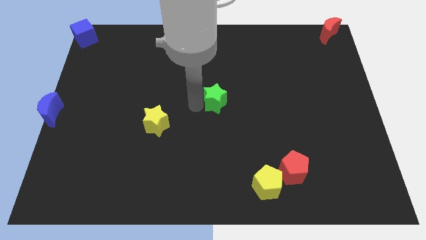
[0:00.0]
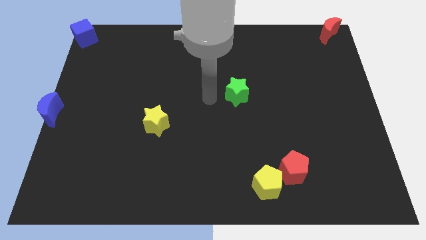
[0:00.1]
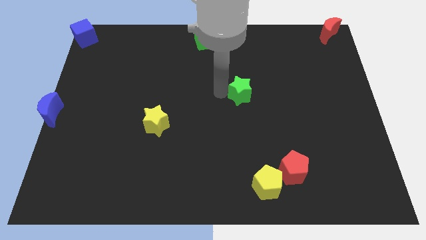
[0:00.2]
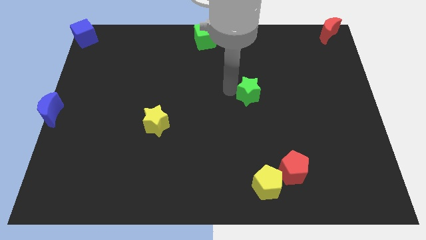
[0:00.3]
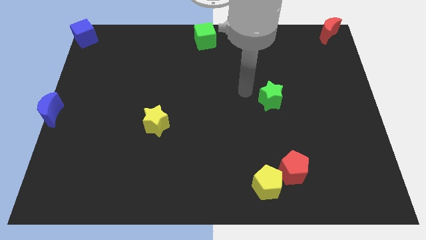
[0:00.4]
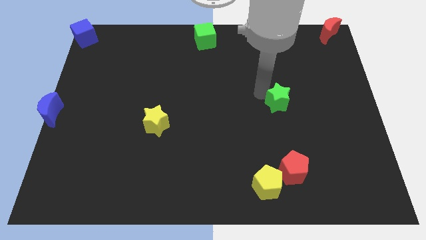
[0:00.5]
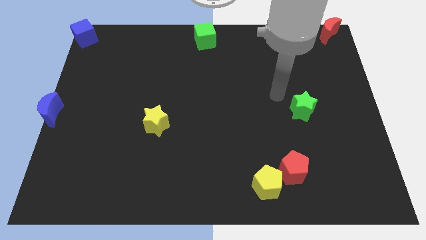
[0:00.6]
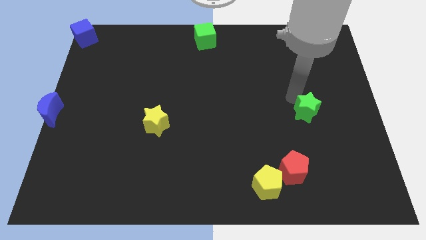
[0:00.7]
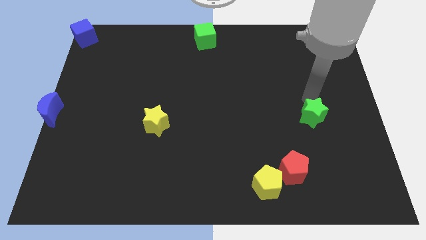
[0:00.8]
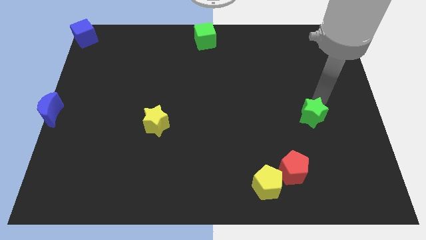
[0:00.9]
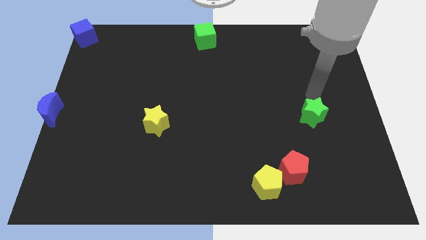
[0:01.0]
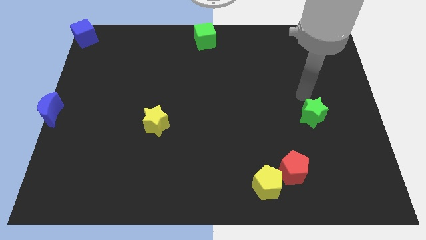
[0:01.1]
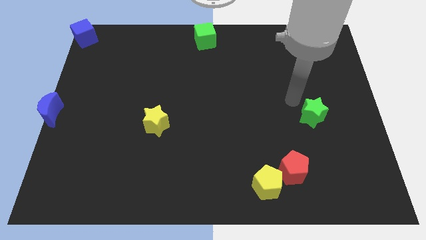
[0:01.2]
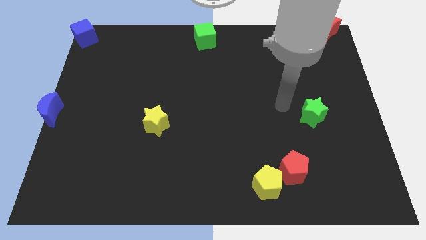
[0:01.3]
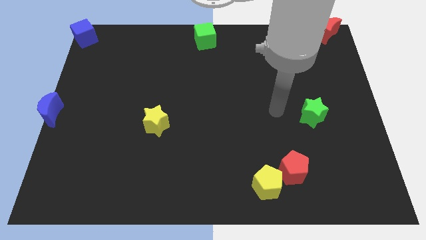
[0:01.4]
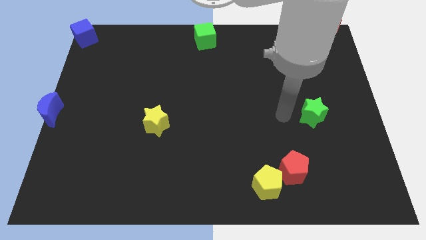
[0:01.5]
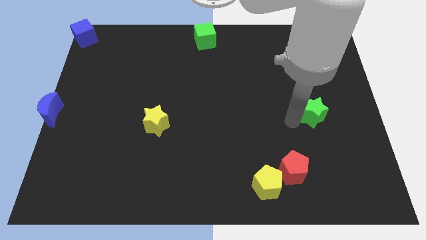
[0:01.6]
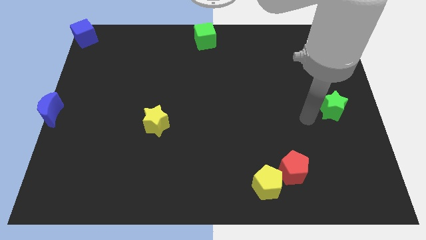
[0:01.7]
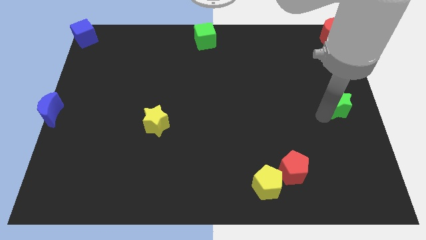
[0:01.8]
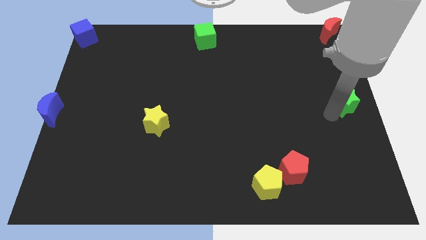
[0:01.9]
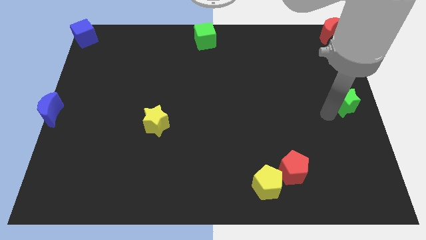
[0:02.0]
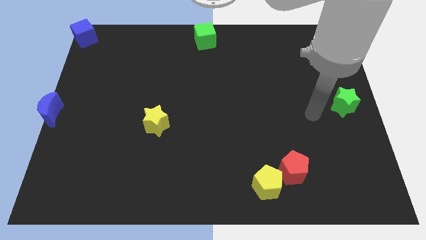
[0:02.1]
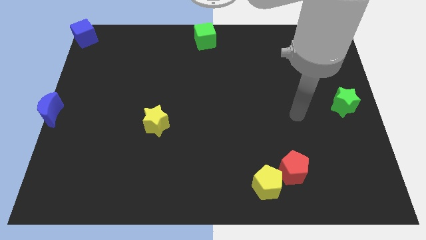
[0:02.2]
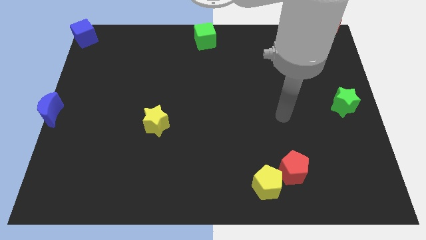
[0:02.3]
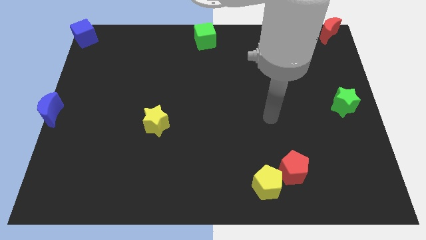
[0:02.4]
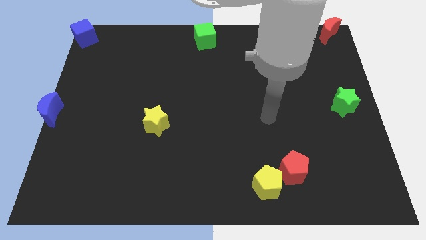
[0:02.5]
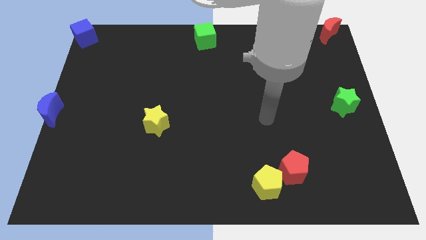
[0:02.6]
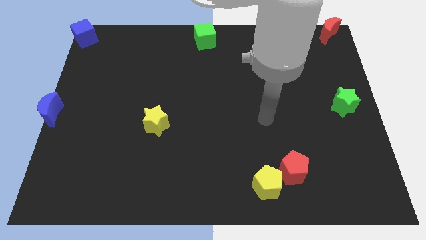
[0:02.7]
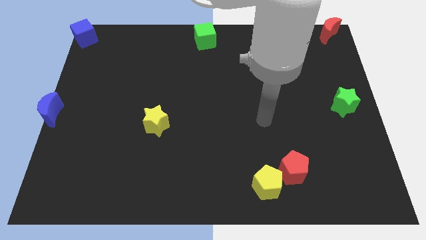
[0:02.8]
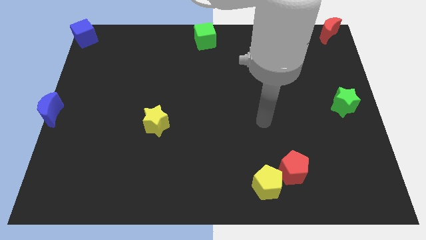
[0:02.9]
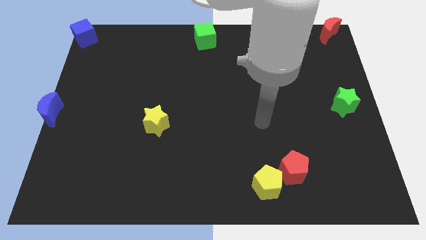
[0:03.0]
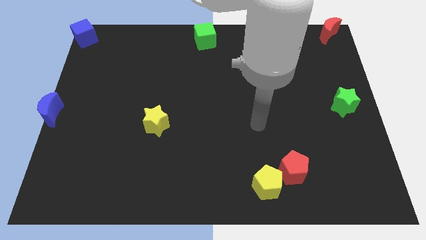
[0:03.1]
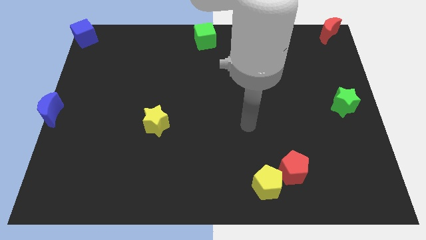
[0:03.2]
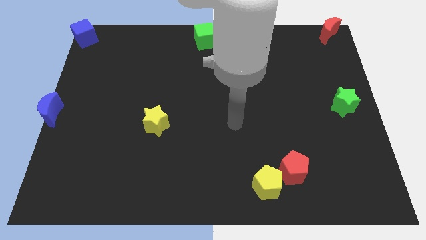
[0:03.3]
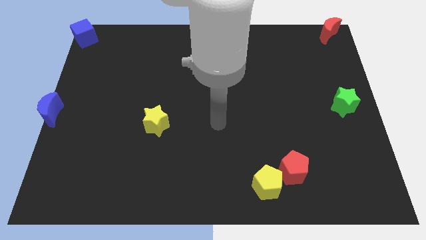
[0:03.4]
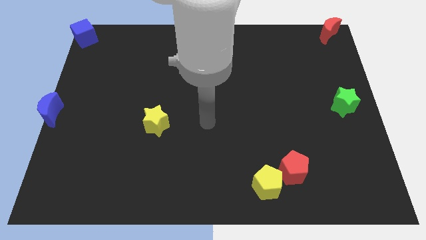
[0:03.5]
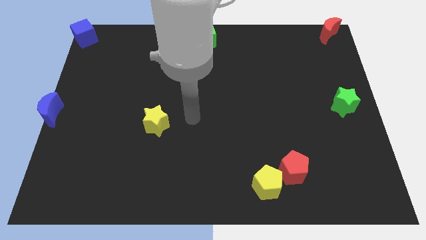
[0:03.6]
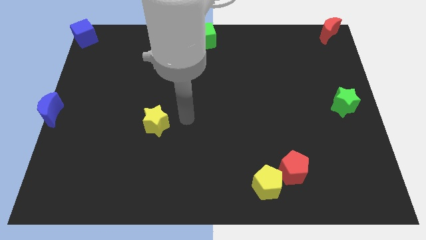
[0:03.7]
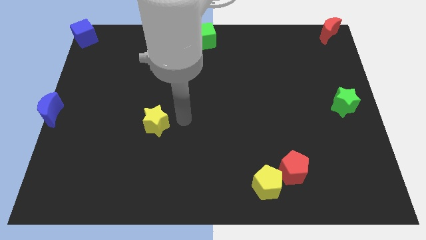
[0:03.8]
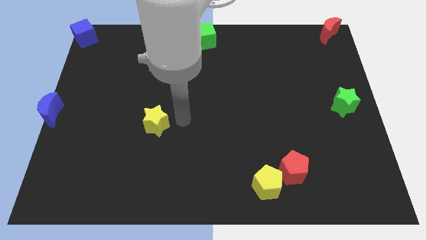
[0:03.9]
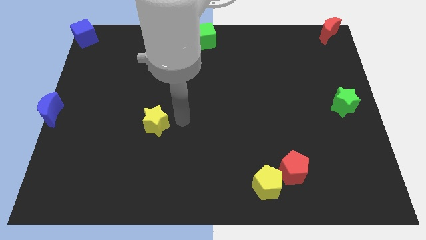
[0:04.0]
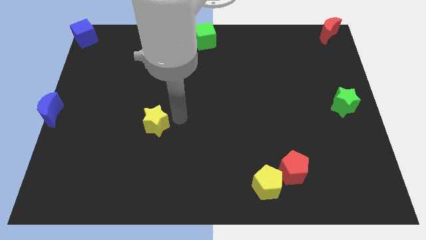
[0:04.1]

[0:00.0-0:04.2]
move the green star to the center right

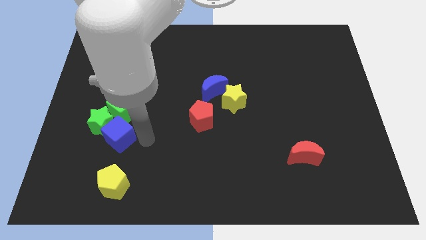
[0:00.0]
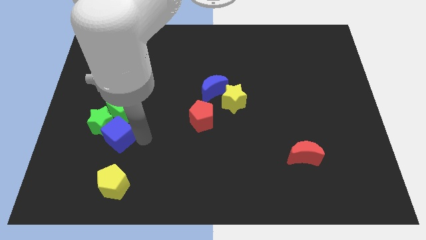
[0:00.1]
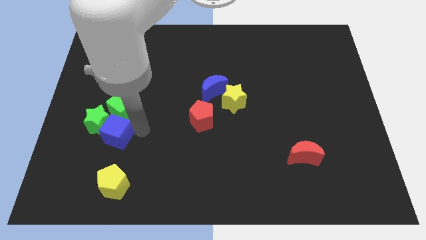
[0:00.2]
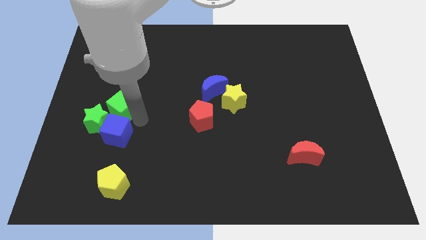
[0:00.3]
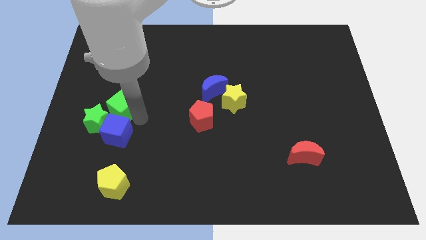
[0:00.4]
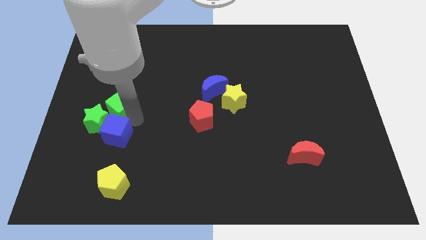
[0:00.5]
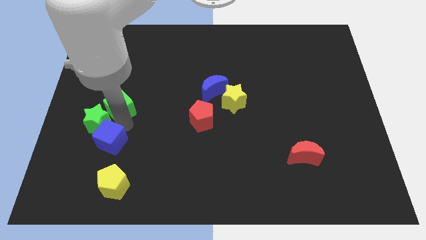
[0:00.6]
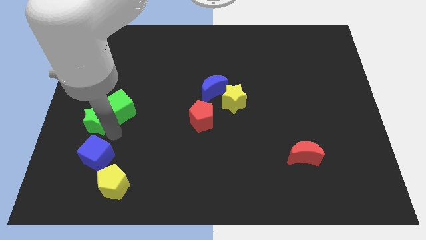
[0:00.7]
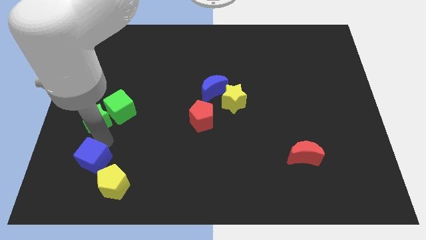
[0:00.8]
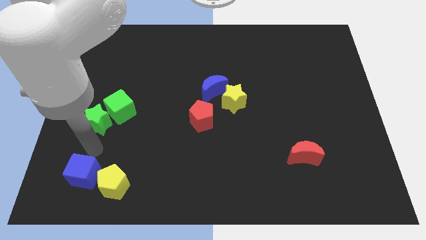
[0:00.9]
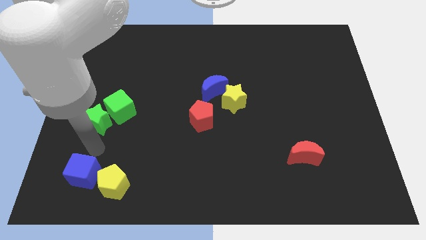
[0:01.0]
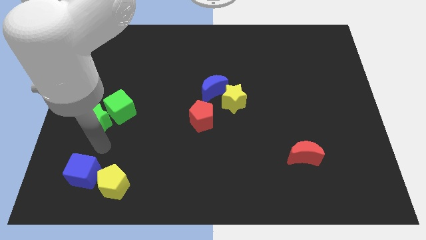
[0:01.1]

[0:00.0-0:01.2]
push the blue cube towards the left of yellow pentagon

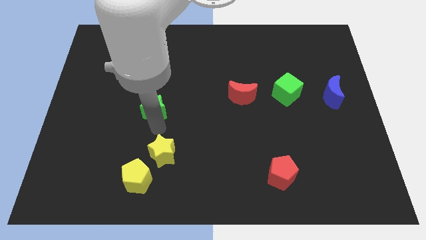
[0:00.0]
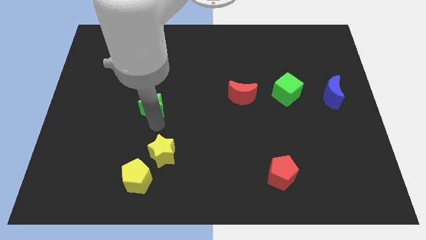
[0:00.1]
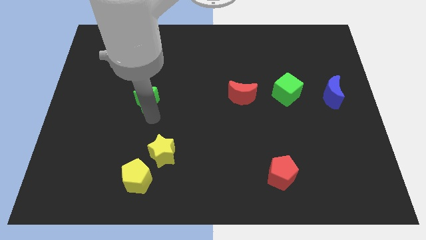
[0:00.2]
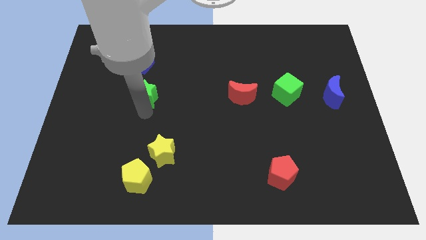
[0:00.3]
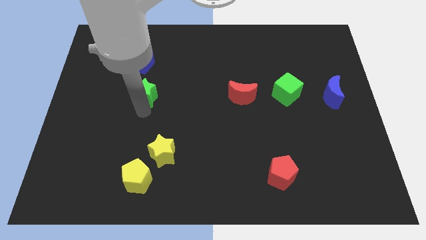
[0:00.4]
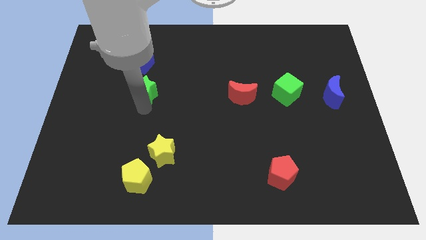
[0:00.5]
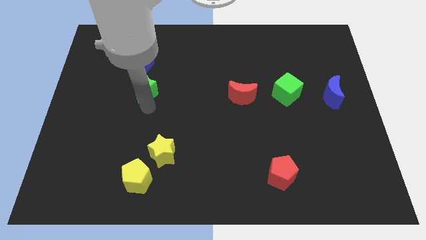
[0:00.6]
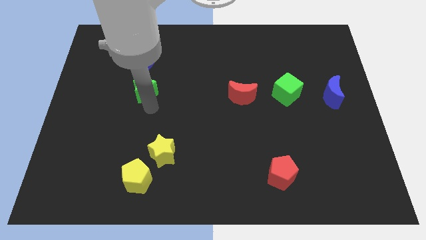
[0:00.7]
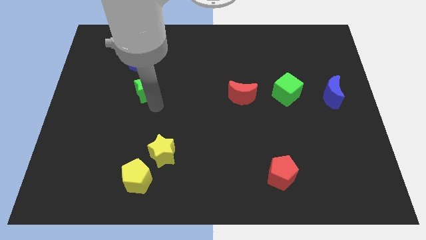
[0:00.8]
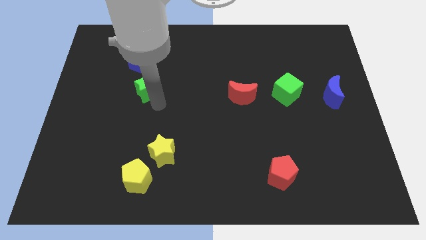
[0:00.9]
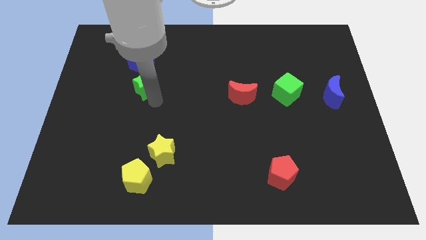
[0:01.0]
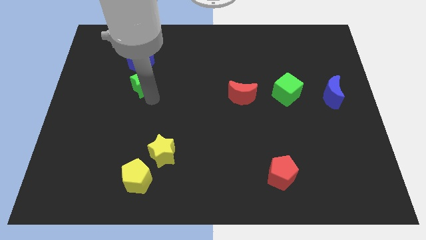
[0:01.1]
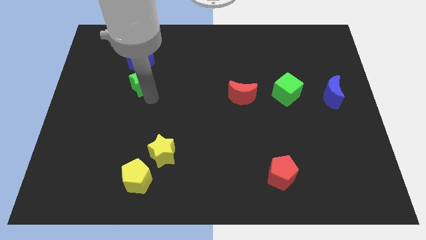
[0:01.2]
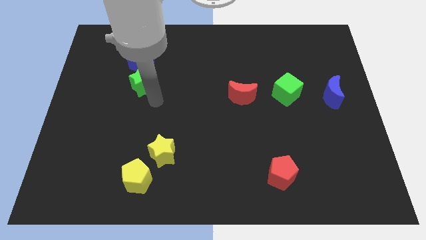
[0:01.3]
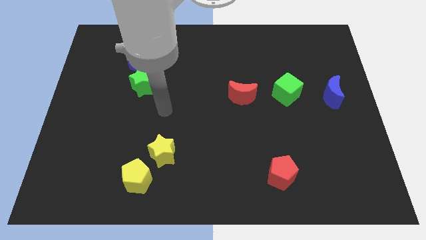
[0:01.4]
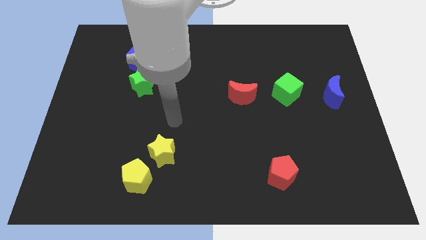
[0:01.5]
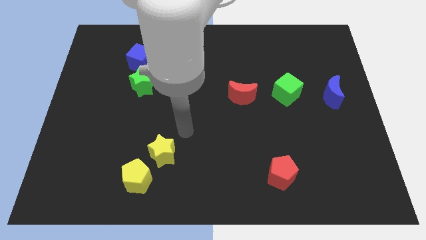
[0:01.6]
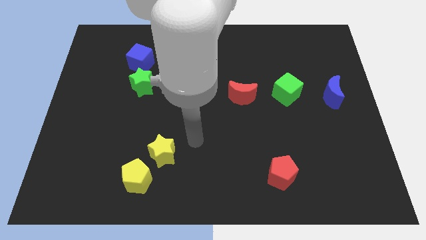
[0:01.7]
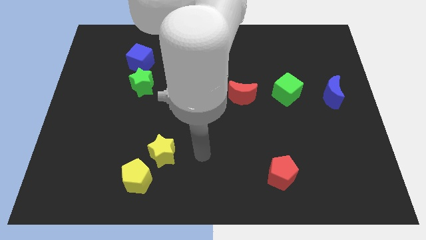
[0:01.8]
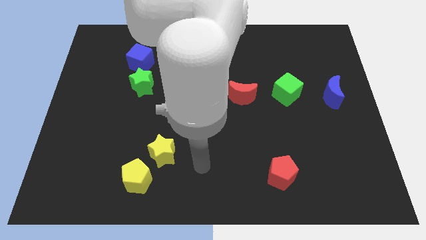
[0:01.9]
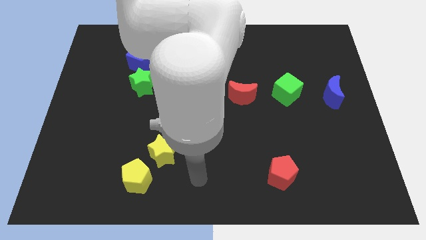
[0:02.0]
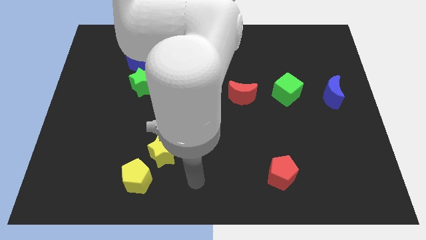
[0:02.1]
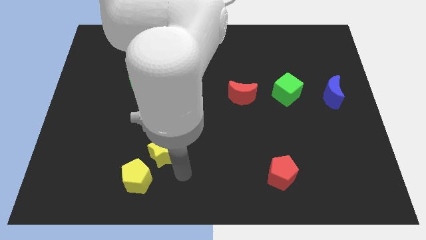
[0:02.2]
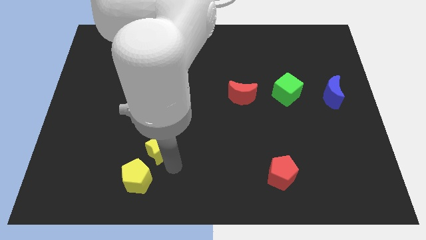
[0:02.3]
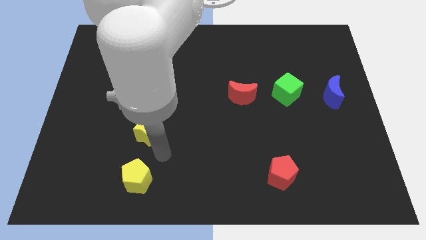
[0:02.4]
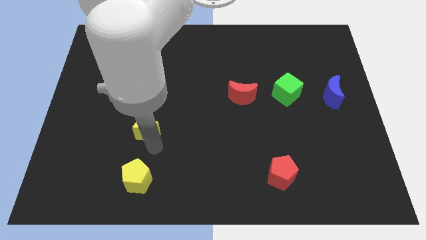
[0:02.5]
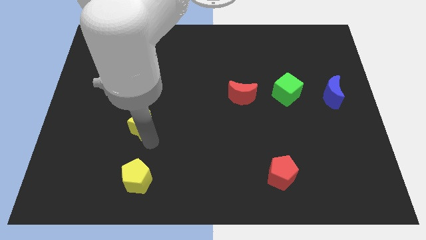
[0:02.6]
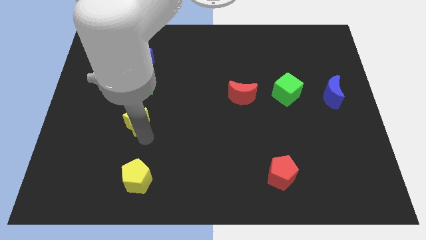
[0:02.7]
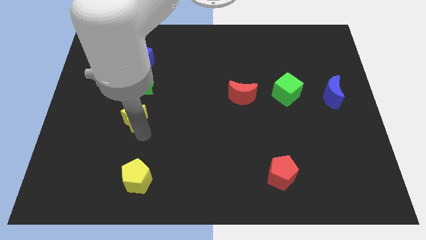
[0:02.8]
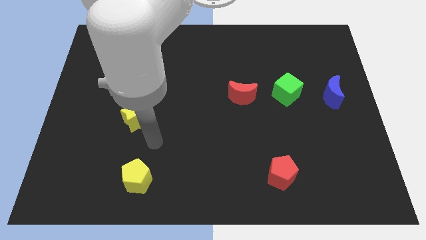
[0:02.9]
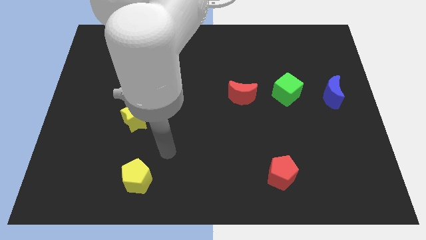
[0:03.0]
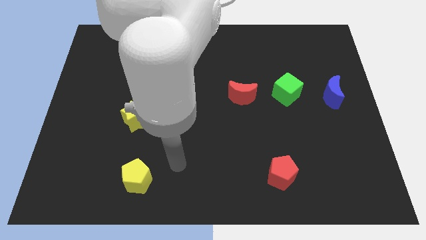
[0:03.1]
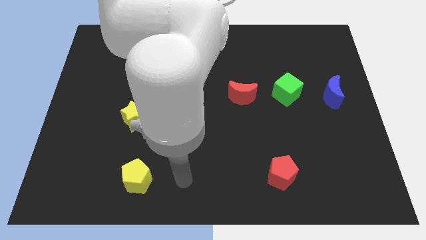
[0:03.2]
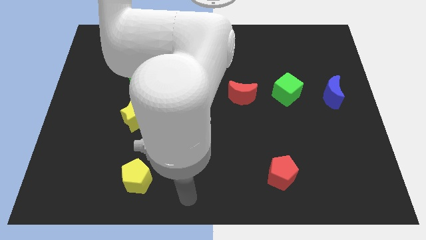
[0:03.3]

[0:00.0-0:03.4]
push green star and the yellow star towards the blue cube

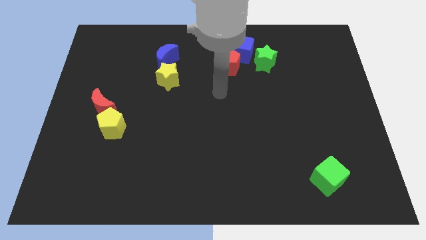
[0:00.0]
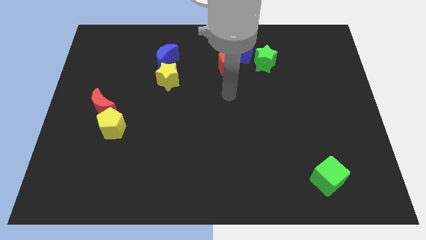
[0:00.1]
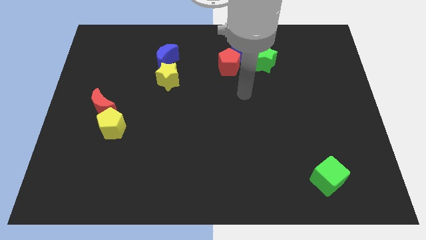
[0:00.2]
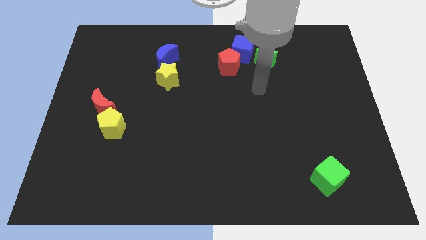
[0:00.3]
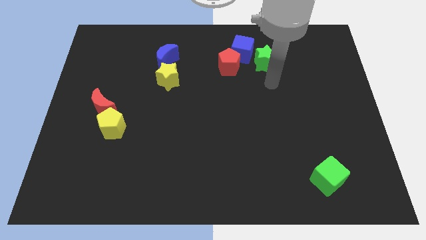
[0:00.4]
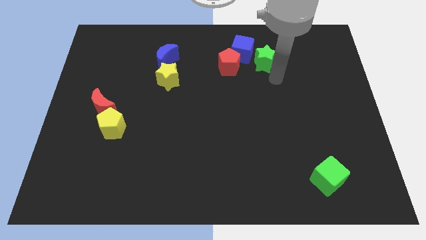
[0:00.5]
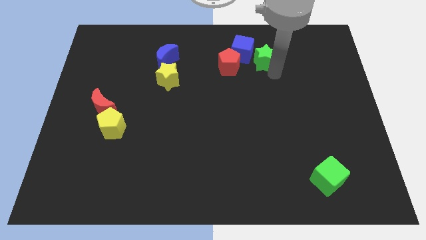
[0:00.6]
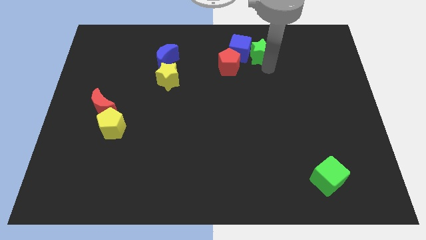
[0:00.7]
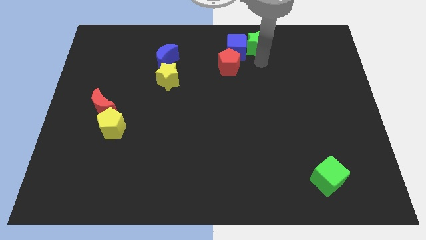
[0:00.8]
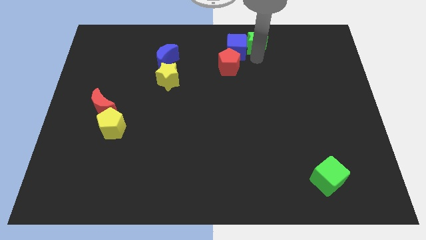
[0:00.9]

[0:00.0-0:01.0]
push the green star into the blue cube
